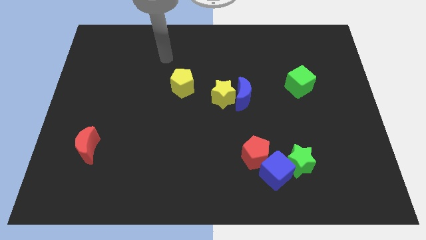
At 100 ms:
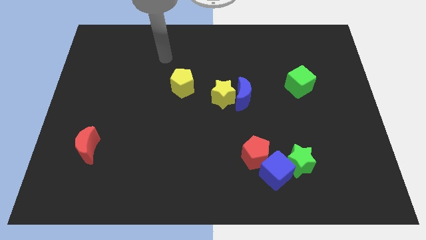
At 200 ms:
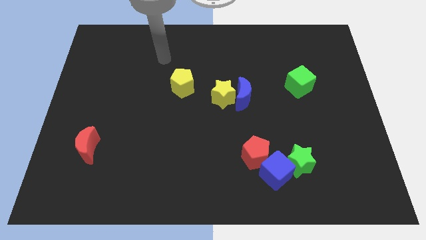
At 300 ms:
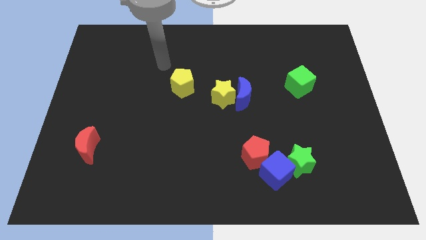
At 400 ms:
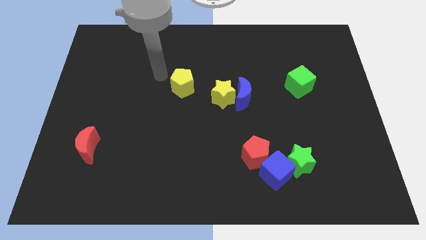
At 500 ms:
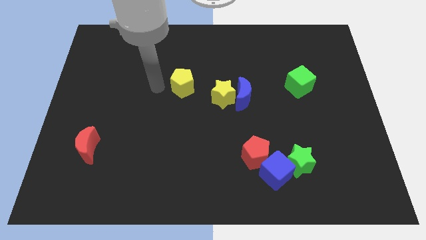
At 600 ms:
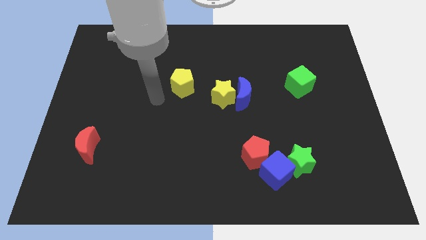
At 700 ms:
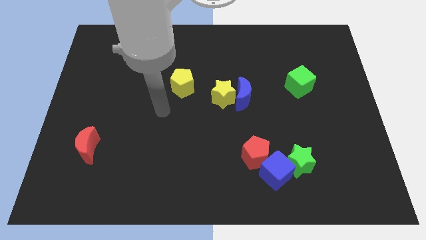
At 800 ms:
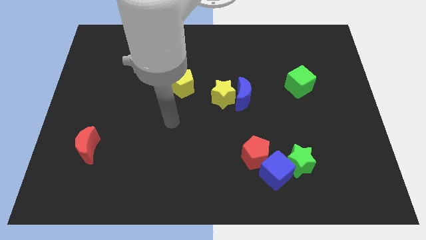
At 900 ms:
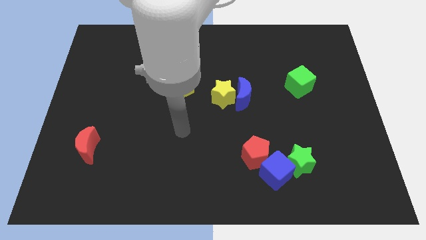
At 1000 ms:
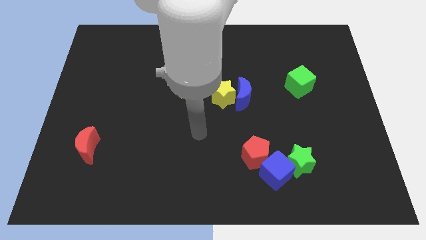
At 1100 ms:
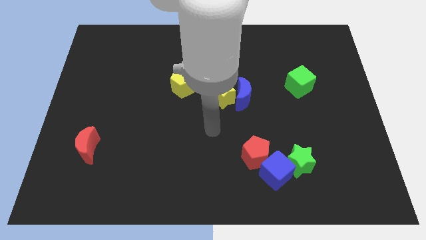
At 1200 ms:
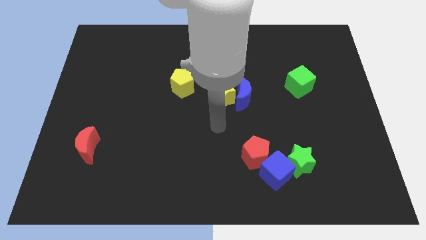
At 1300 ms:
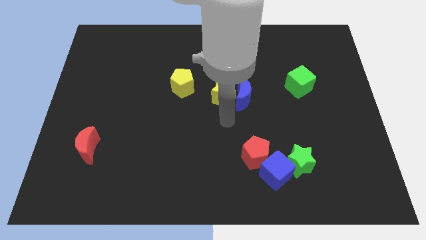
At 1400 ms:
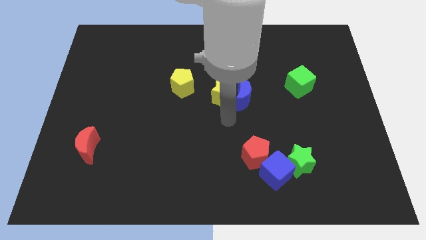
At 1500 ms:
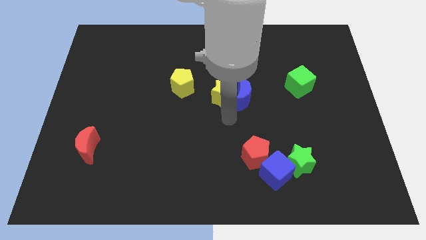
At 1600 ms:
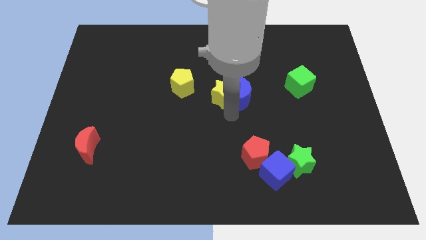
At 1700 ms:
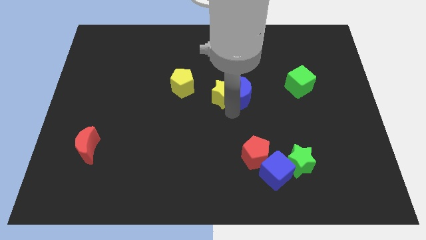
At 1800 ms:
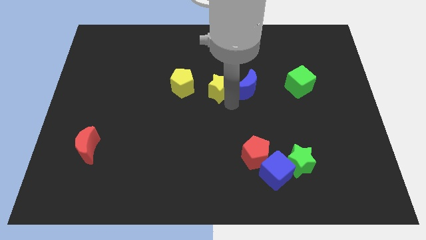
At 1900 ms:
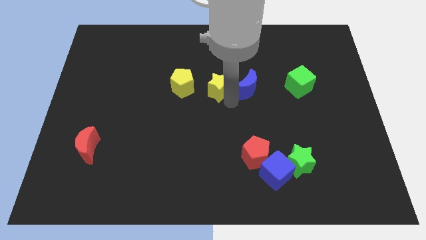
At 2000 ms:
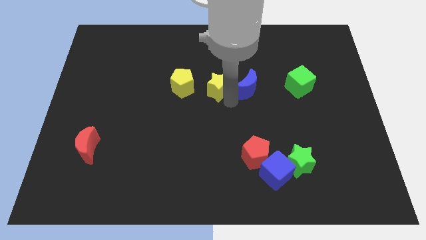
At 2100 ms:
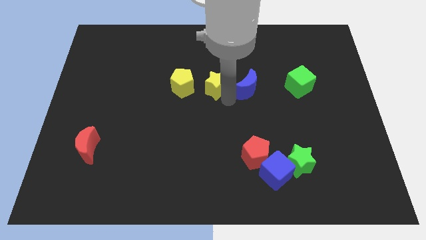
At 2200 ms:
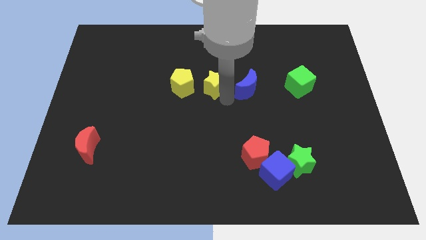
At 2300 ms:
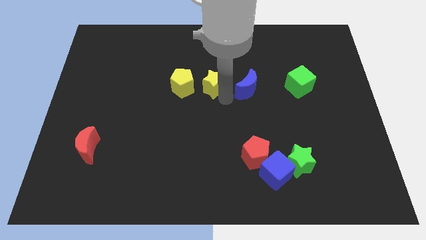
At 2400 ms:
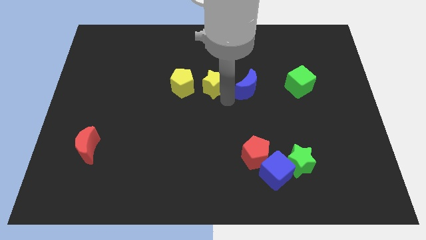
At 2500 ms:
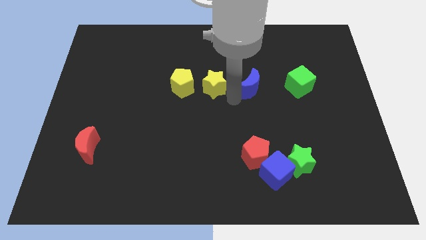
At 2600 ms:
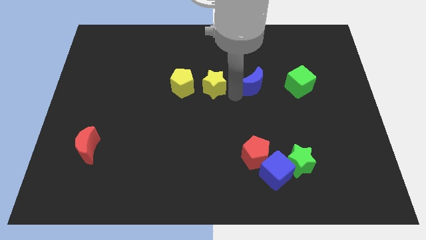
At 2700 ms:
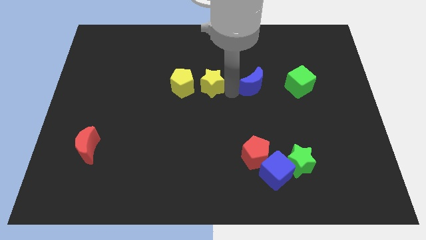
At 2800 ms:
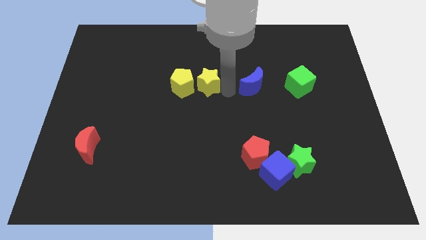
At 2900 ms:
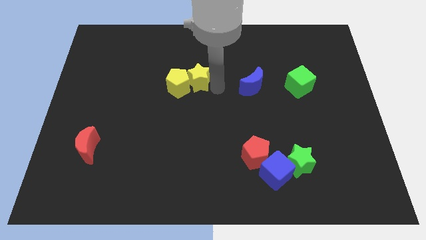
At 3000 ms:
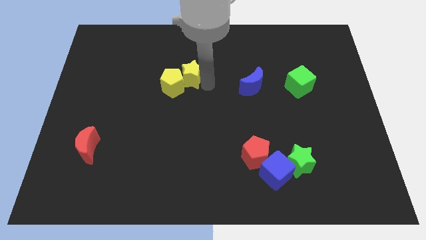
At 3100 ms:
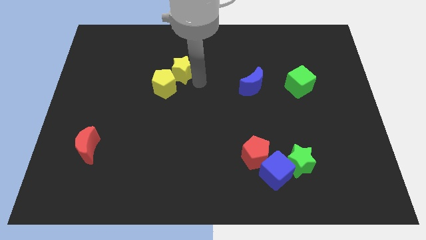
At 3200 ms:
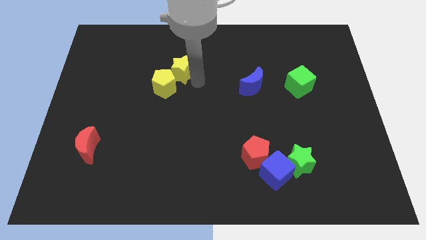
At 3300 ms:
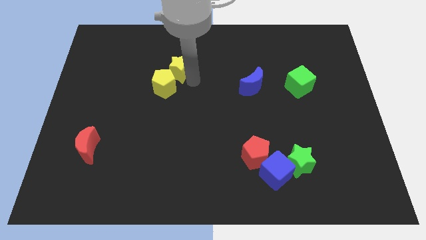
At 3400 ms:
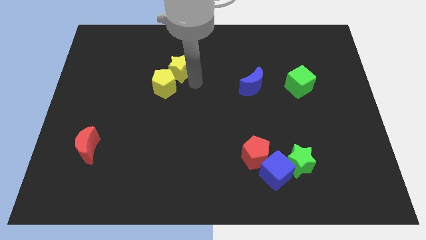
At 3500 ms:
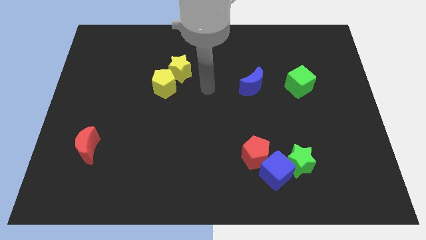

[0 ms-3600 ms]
separate the yellow star and the blue moon

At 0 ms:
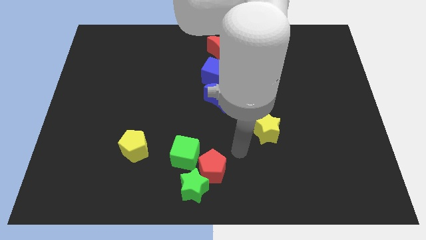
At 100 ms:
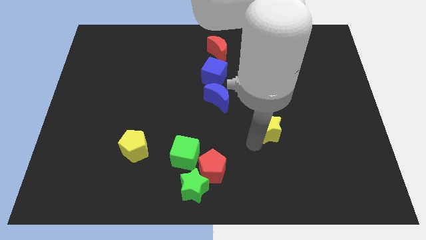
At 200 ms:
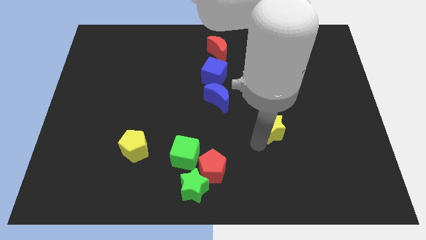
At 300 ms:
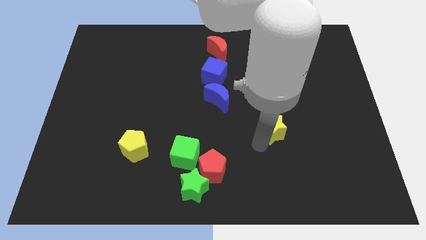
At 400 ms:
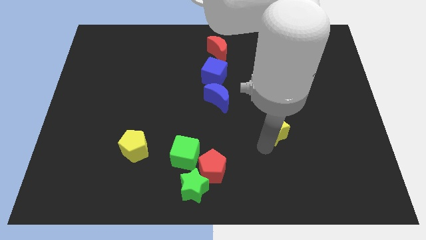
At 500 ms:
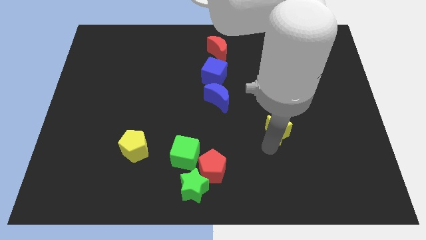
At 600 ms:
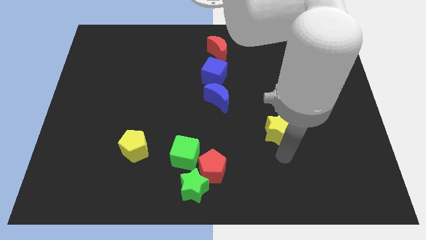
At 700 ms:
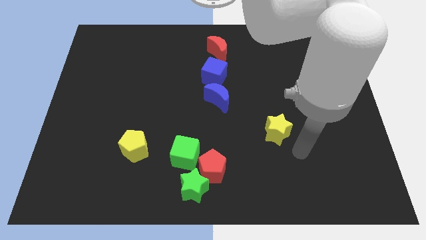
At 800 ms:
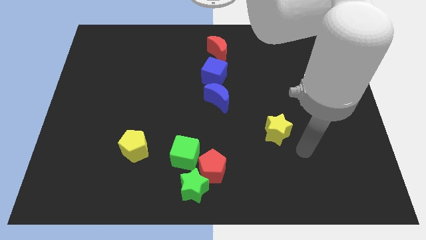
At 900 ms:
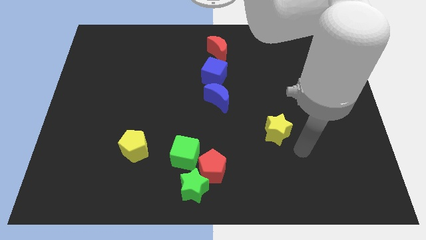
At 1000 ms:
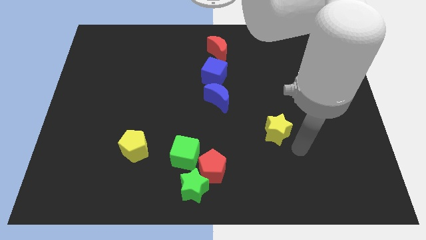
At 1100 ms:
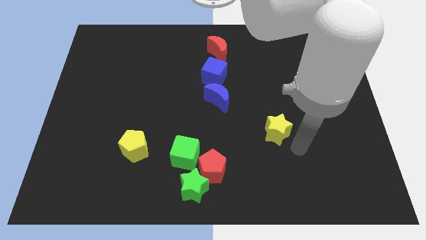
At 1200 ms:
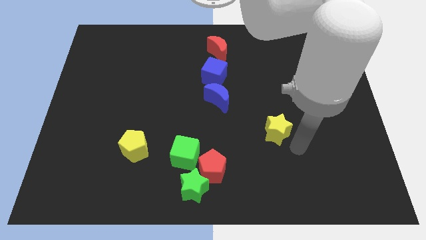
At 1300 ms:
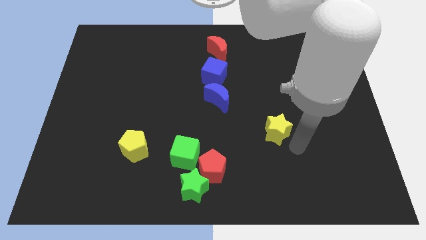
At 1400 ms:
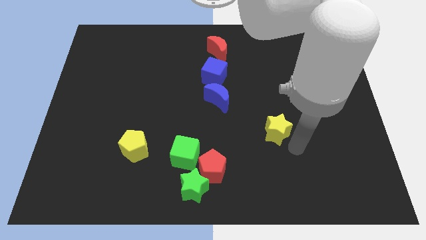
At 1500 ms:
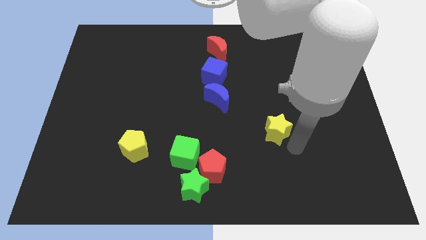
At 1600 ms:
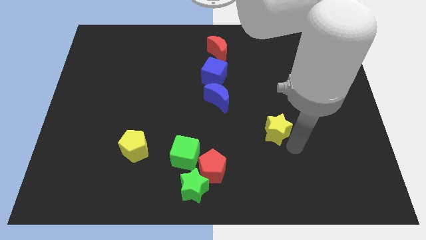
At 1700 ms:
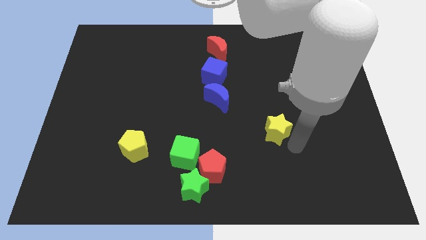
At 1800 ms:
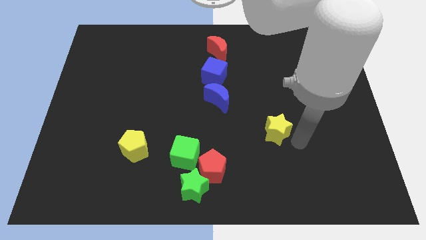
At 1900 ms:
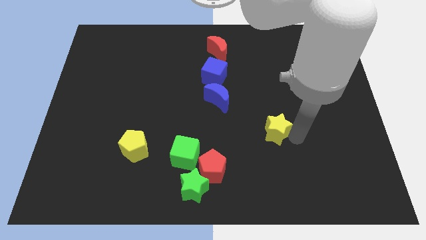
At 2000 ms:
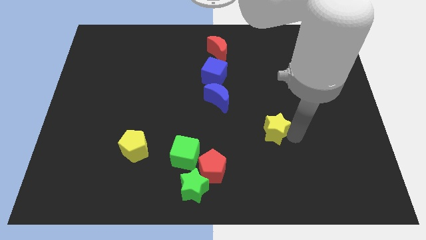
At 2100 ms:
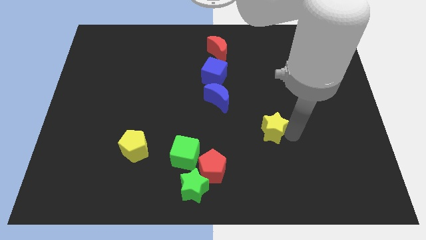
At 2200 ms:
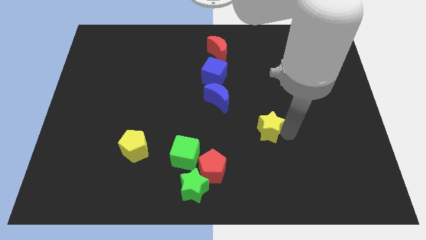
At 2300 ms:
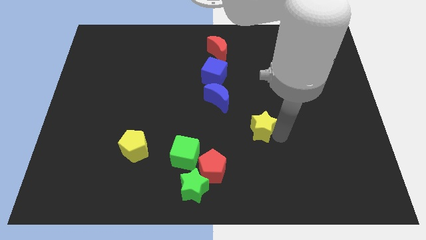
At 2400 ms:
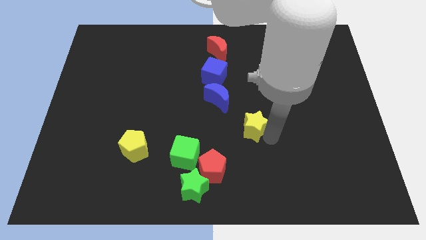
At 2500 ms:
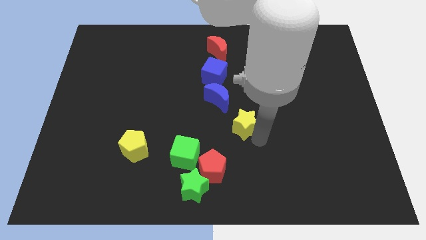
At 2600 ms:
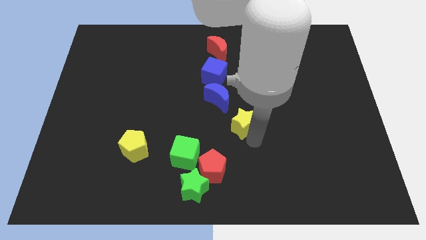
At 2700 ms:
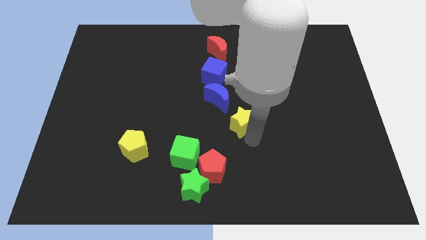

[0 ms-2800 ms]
move the yellow star to the bottom right of the blue crescent

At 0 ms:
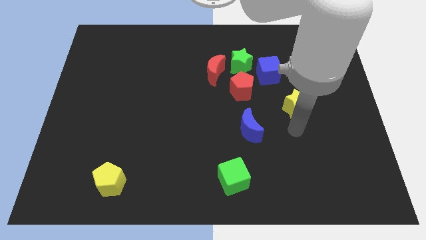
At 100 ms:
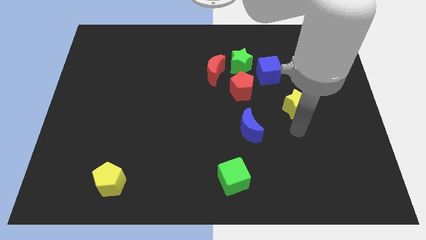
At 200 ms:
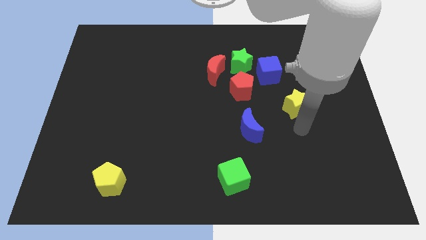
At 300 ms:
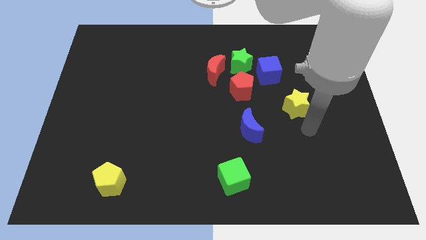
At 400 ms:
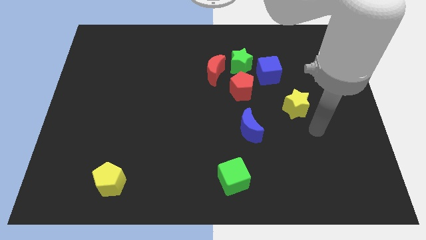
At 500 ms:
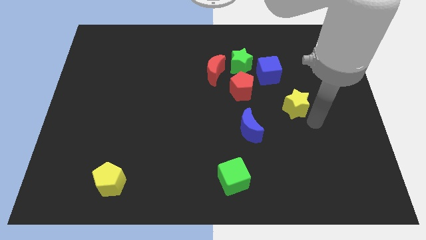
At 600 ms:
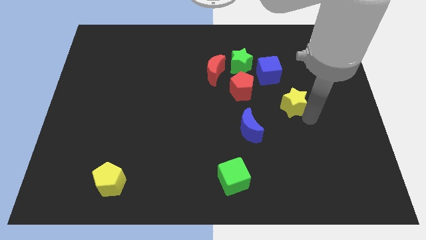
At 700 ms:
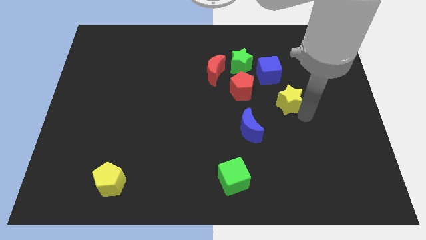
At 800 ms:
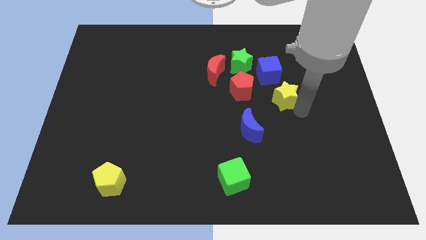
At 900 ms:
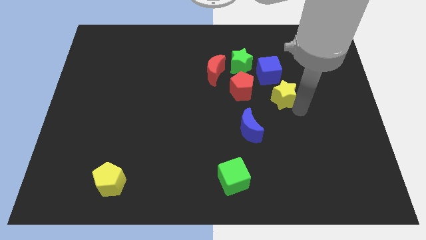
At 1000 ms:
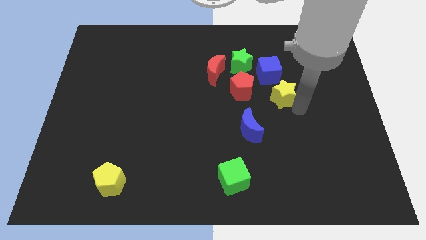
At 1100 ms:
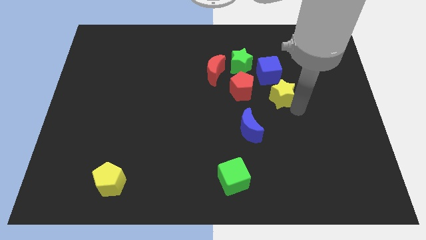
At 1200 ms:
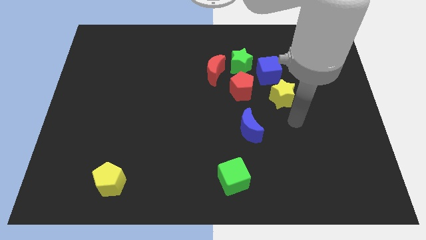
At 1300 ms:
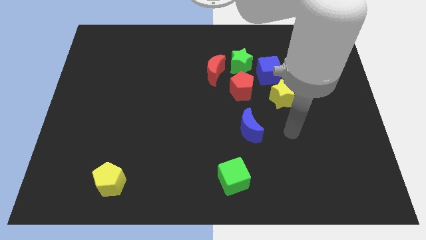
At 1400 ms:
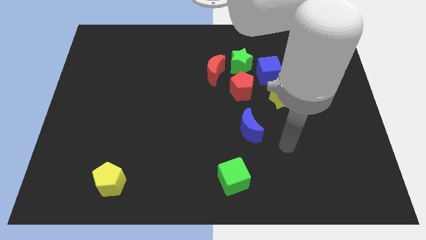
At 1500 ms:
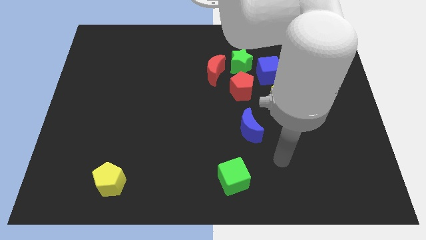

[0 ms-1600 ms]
place the yellow star below the blue cube

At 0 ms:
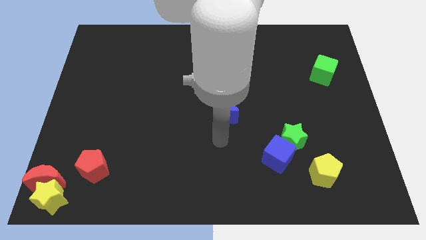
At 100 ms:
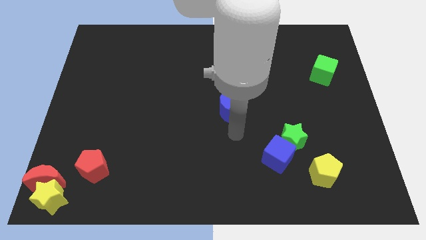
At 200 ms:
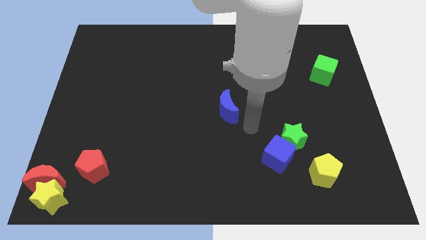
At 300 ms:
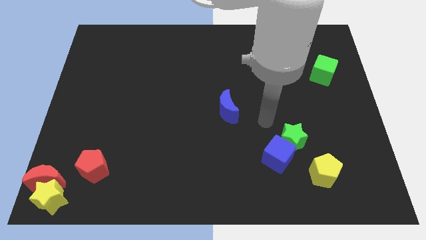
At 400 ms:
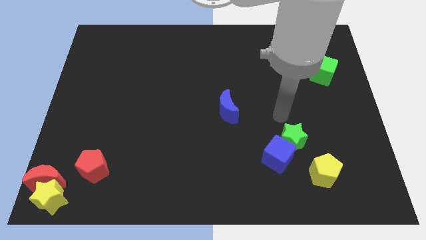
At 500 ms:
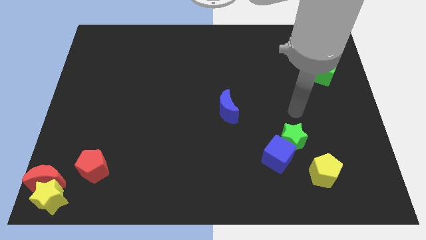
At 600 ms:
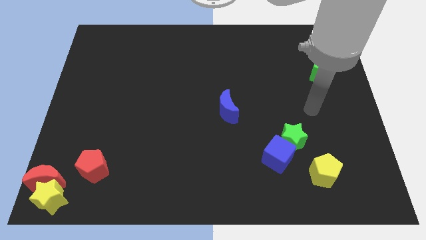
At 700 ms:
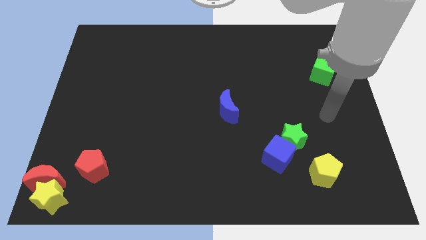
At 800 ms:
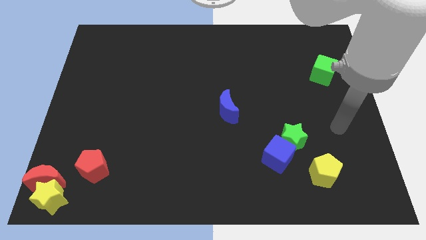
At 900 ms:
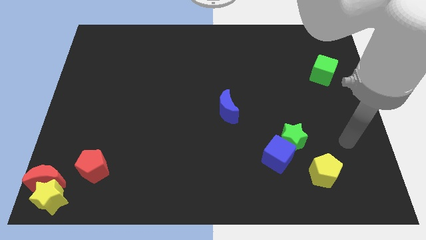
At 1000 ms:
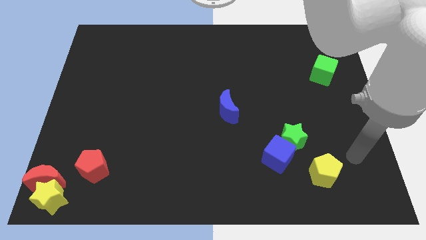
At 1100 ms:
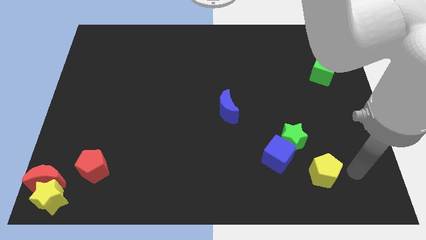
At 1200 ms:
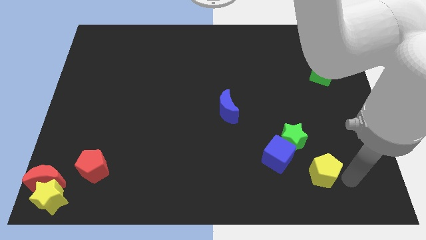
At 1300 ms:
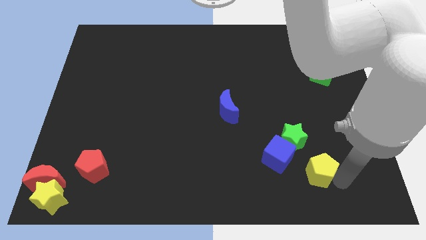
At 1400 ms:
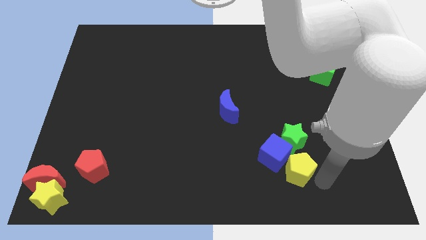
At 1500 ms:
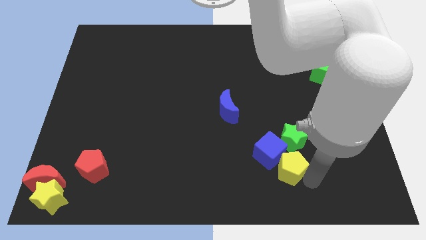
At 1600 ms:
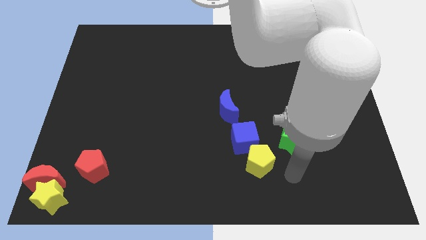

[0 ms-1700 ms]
push the yellow pentagon into the blue cube
